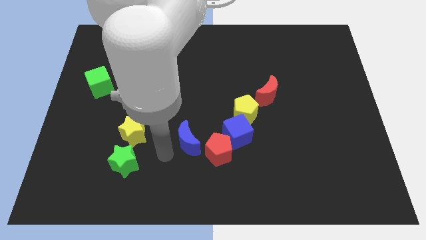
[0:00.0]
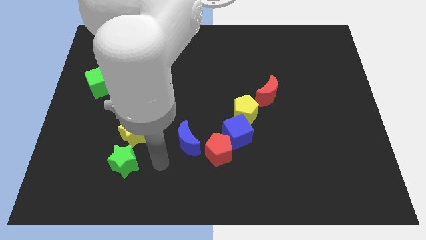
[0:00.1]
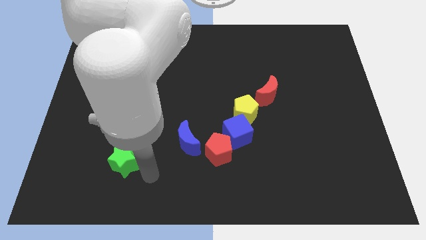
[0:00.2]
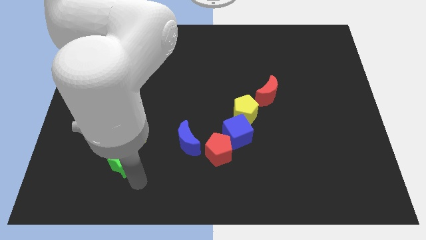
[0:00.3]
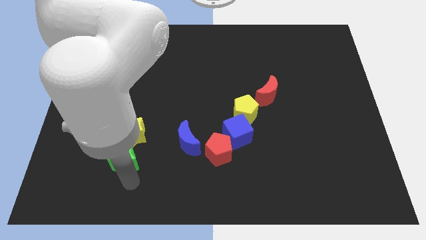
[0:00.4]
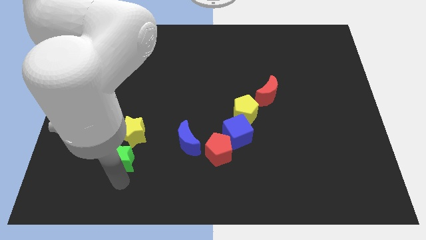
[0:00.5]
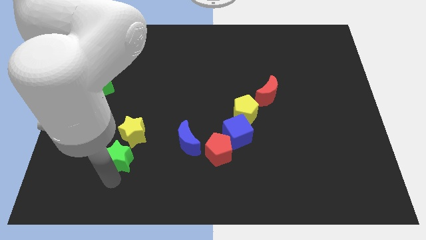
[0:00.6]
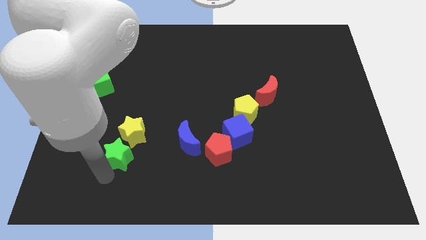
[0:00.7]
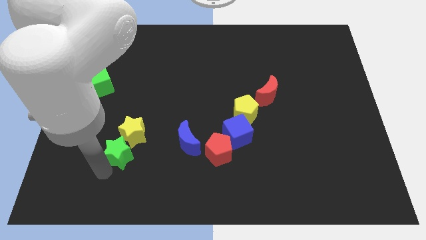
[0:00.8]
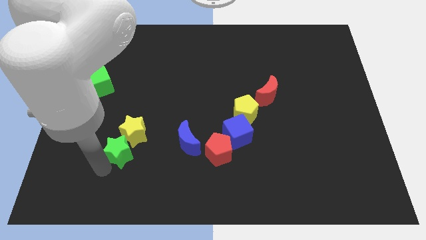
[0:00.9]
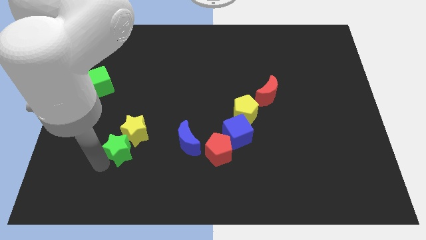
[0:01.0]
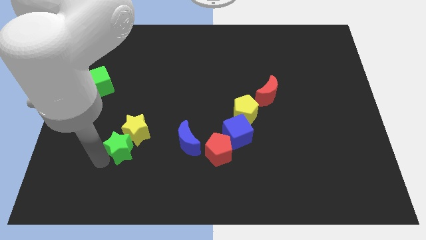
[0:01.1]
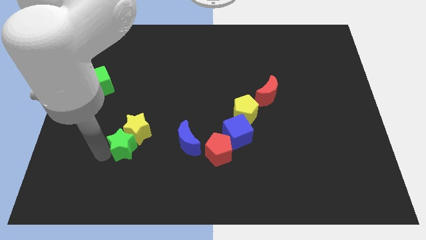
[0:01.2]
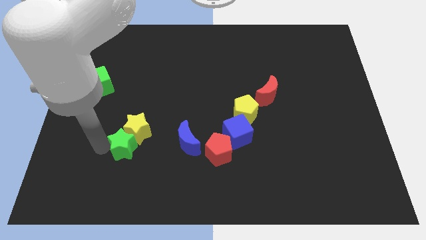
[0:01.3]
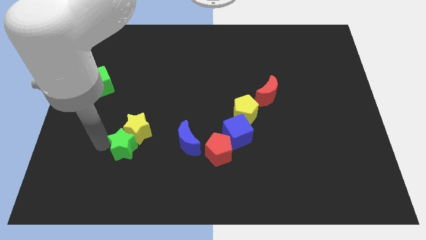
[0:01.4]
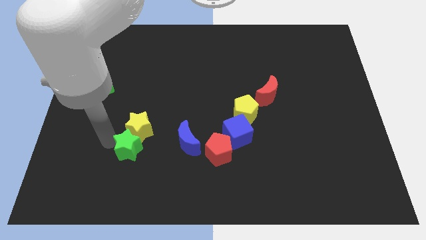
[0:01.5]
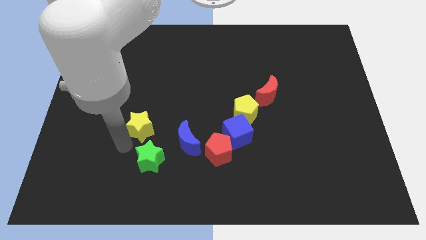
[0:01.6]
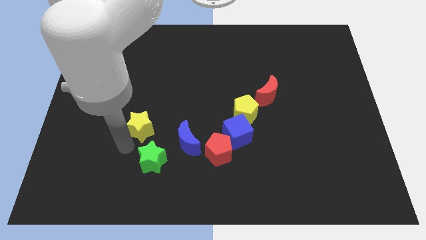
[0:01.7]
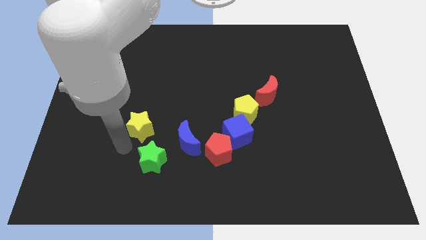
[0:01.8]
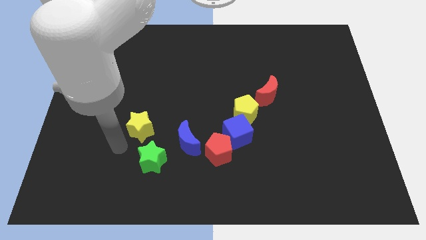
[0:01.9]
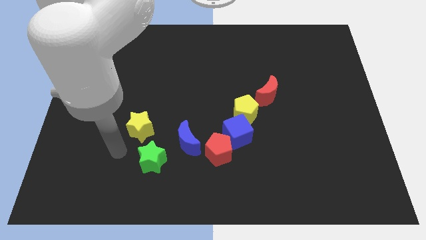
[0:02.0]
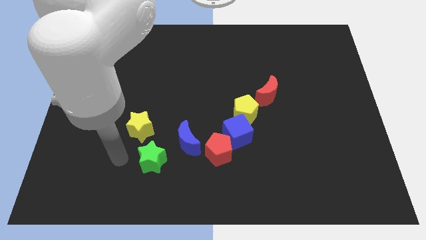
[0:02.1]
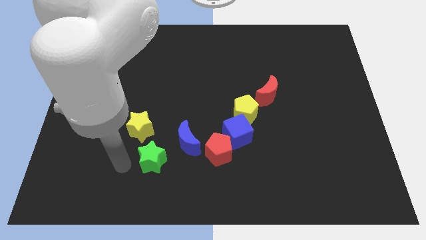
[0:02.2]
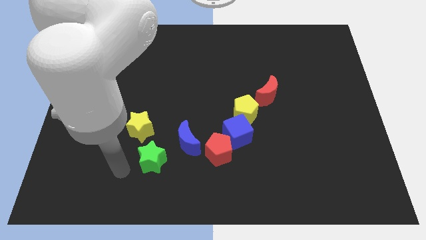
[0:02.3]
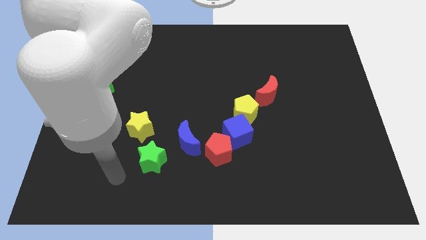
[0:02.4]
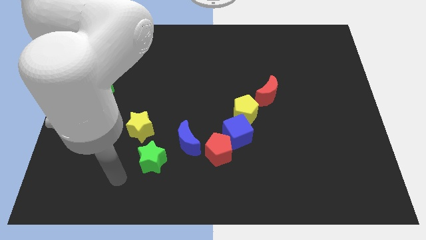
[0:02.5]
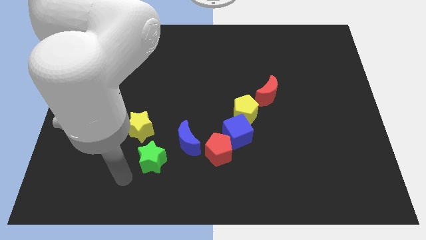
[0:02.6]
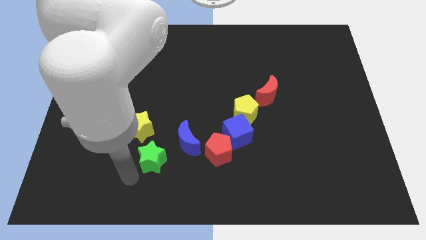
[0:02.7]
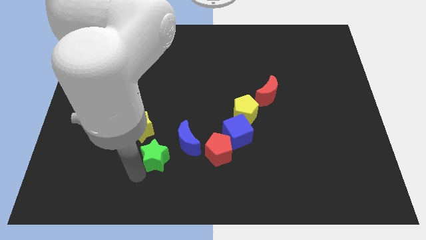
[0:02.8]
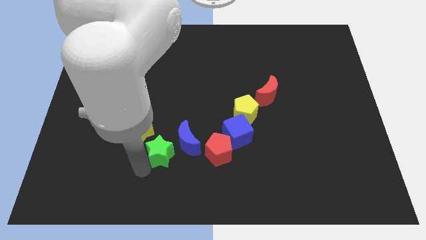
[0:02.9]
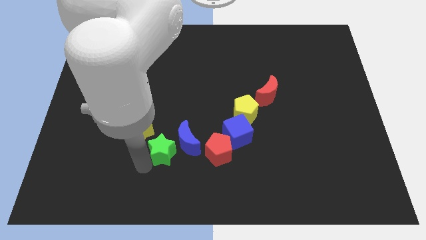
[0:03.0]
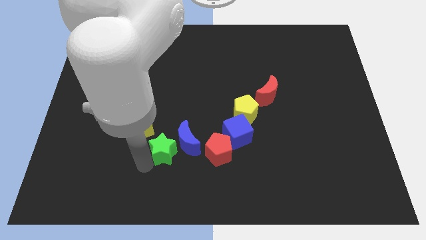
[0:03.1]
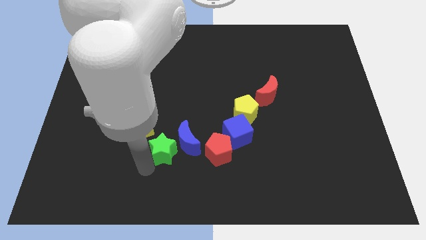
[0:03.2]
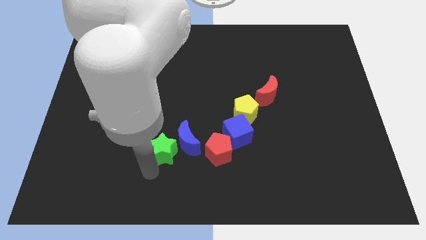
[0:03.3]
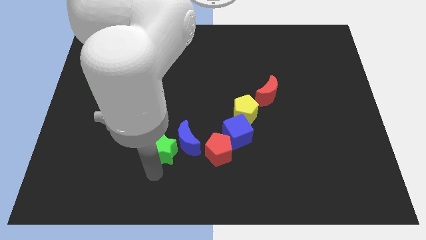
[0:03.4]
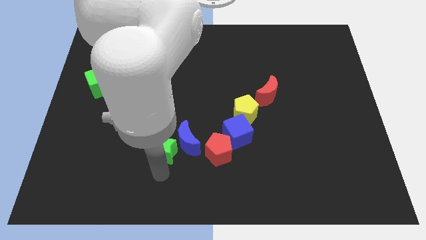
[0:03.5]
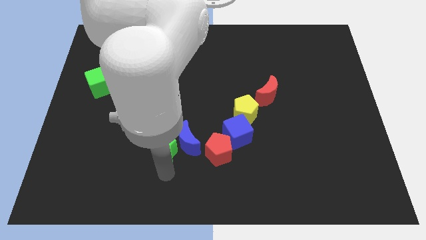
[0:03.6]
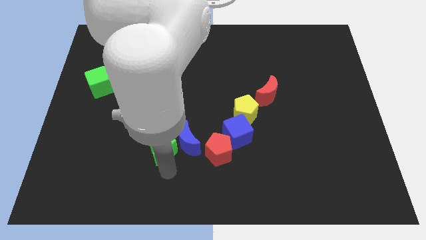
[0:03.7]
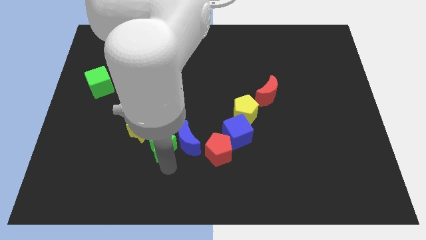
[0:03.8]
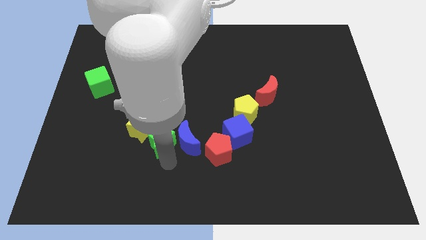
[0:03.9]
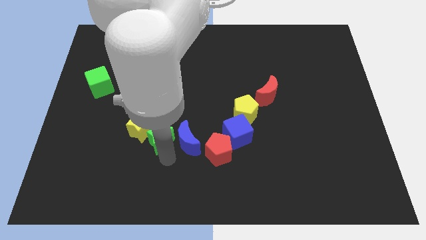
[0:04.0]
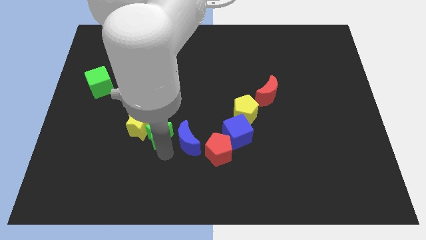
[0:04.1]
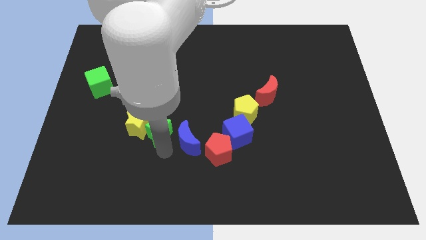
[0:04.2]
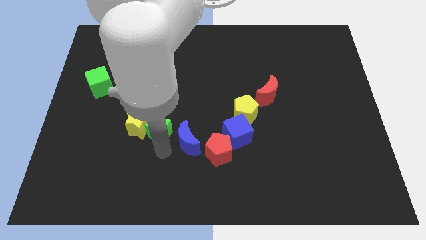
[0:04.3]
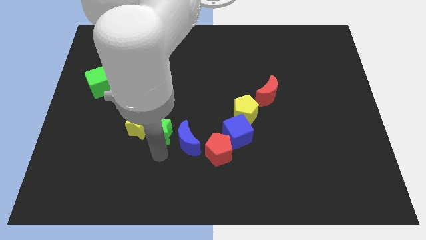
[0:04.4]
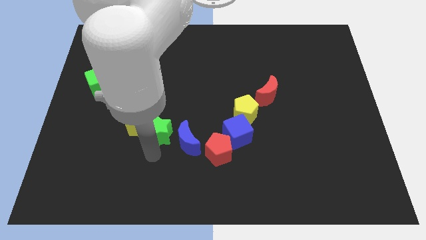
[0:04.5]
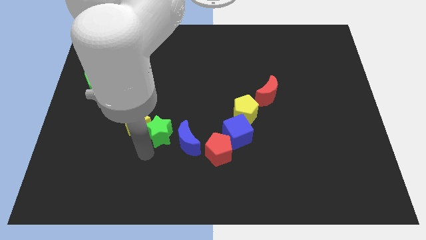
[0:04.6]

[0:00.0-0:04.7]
push the green star to the left of blue moon

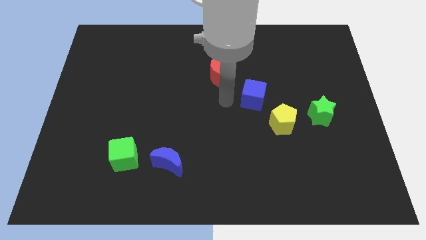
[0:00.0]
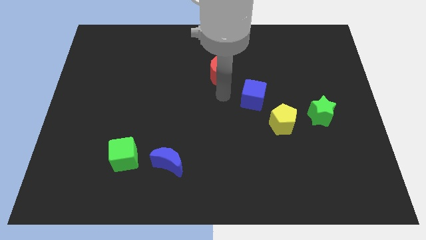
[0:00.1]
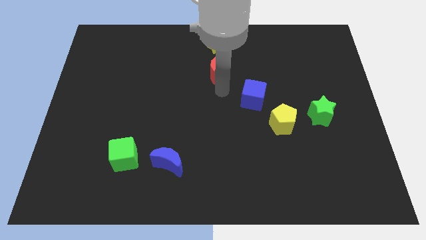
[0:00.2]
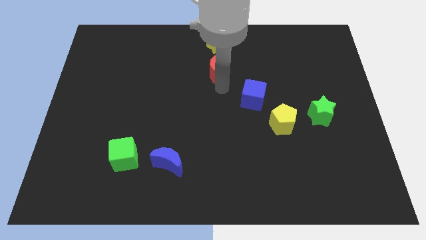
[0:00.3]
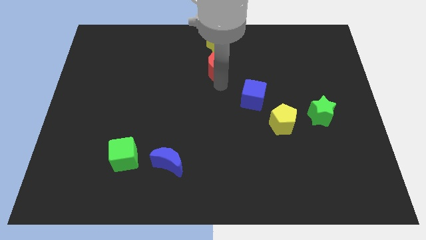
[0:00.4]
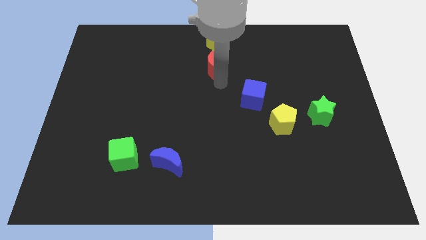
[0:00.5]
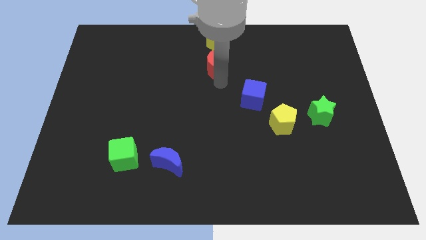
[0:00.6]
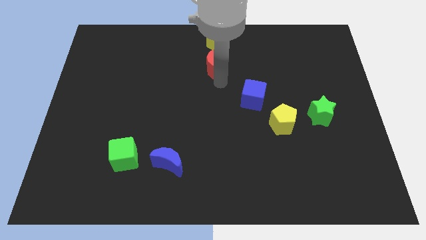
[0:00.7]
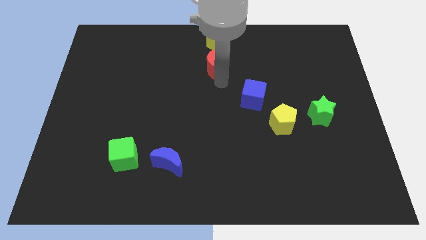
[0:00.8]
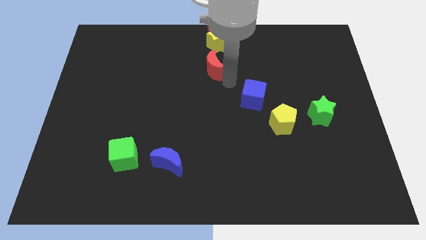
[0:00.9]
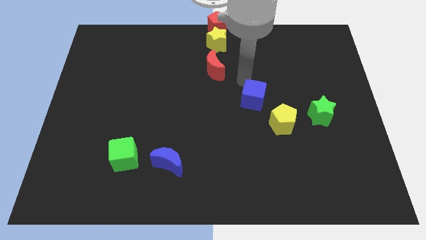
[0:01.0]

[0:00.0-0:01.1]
push red moon upwards

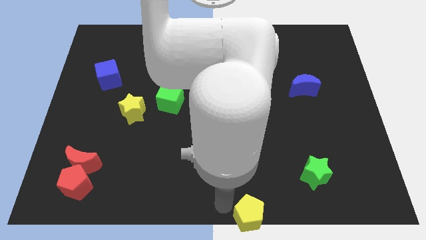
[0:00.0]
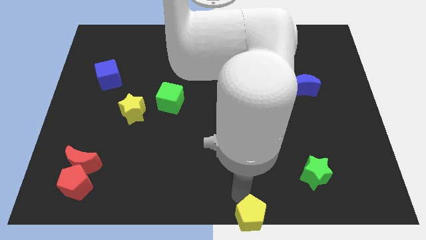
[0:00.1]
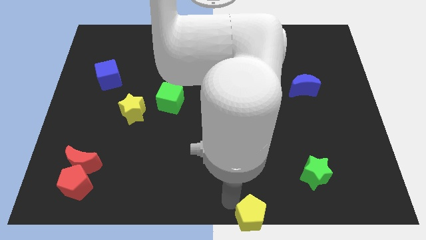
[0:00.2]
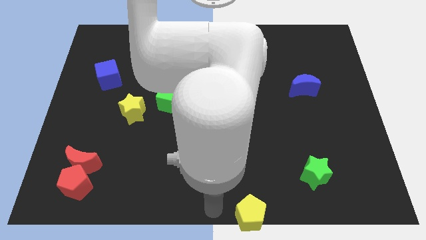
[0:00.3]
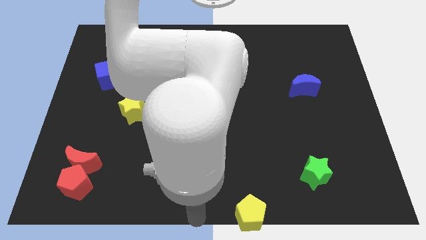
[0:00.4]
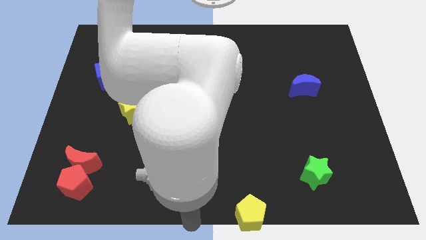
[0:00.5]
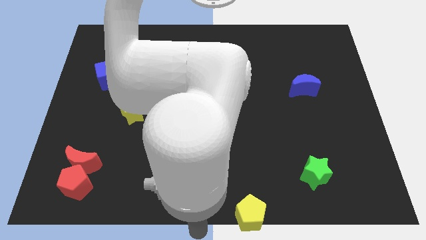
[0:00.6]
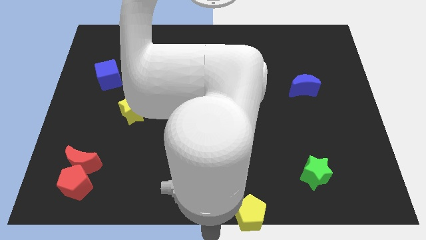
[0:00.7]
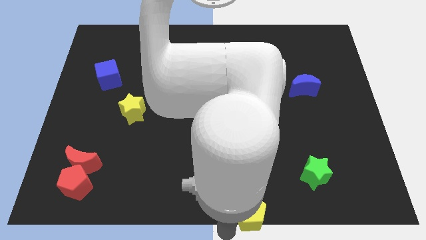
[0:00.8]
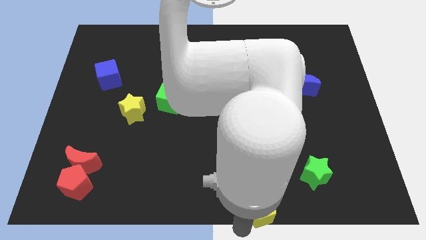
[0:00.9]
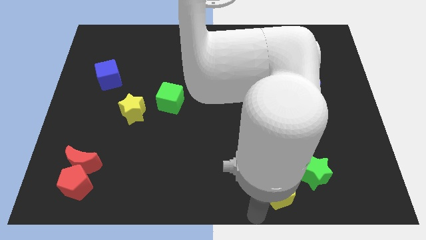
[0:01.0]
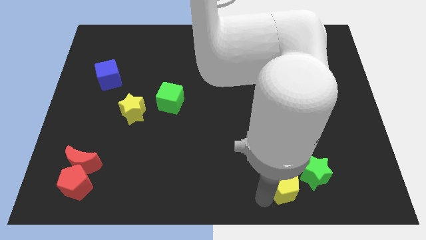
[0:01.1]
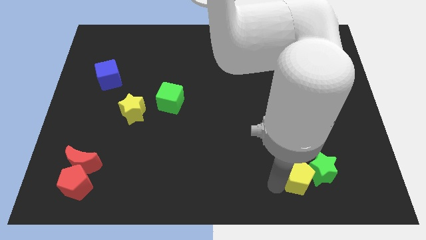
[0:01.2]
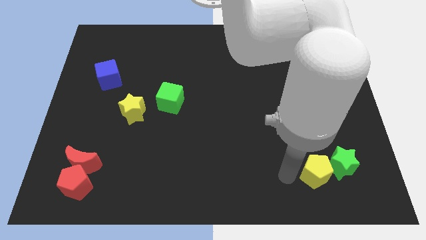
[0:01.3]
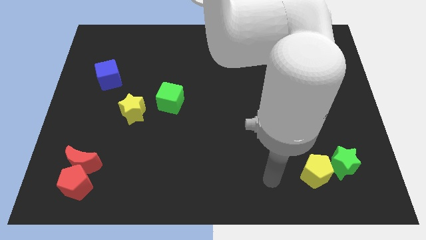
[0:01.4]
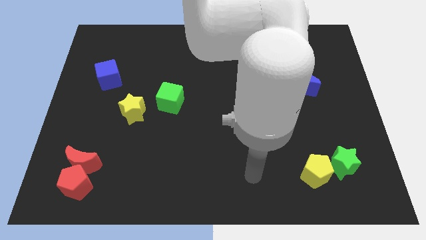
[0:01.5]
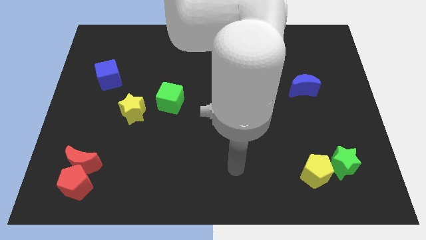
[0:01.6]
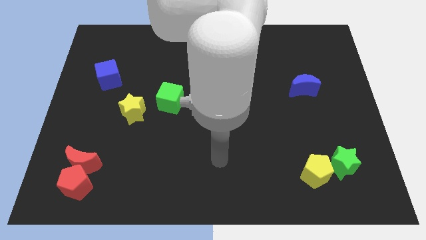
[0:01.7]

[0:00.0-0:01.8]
push the yellow pentagon to the left side of the green star

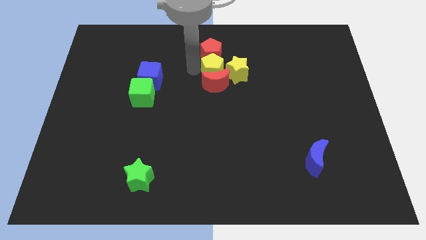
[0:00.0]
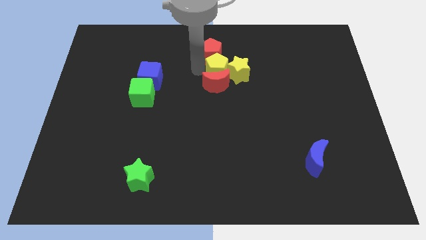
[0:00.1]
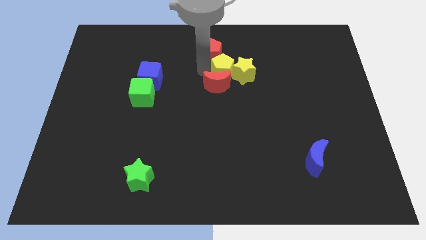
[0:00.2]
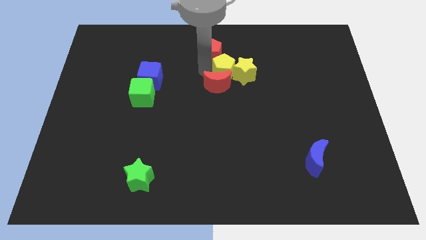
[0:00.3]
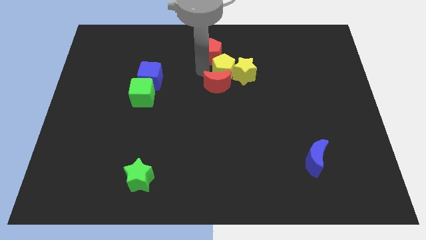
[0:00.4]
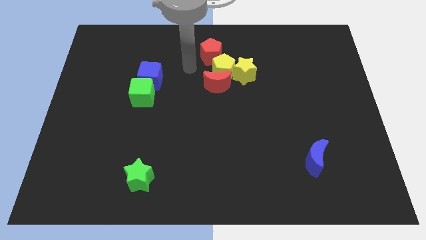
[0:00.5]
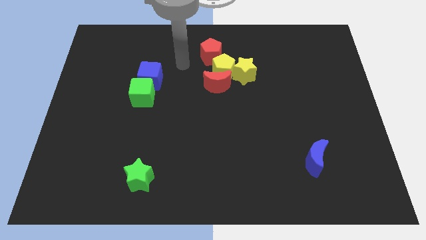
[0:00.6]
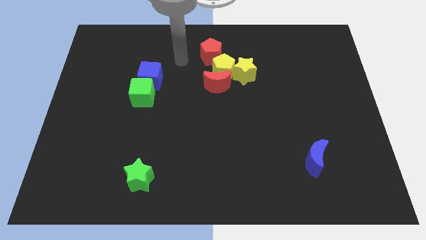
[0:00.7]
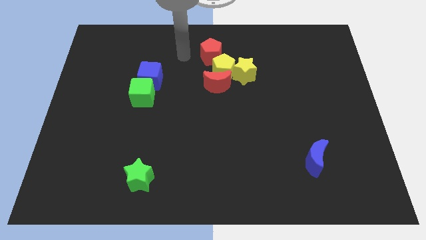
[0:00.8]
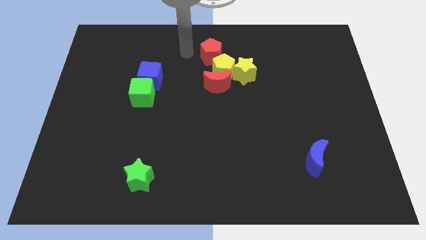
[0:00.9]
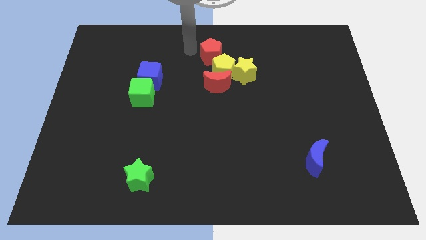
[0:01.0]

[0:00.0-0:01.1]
drag the yellow pentagon to the right

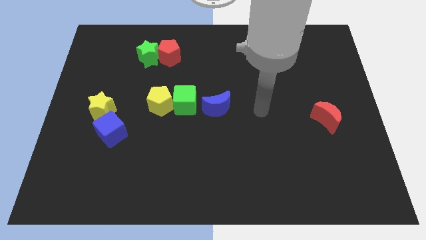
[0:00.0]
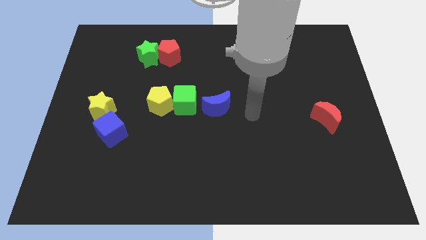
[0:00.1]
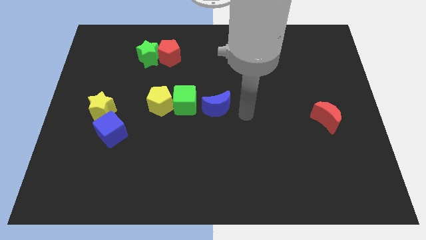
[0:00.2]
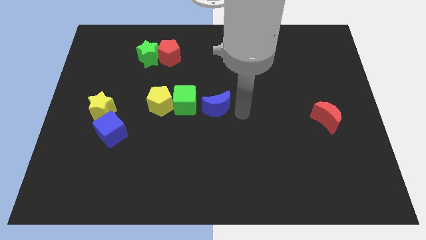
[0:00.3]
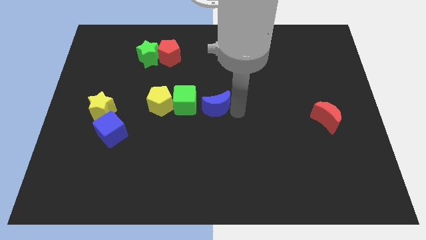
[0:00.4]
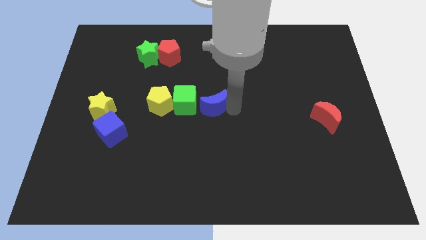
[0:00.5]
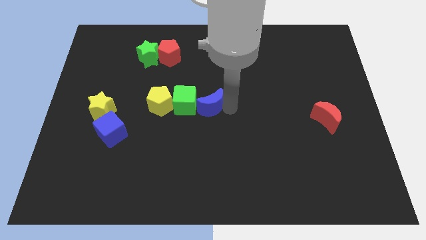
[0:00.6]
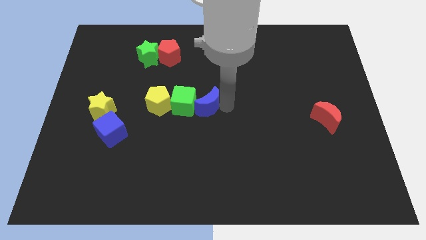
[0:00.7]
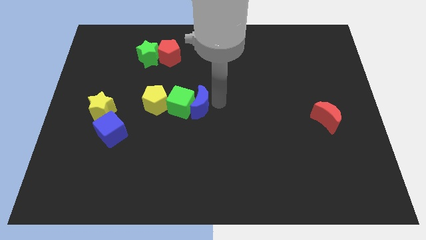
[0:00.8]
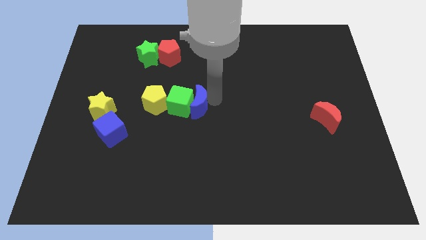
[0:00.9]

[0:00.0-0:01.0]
push the blue moon into the green cube
